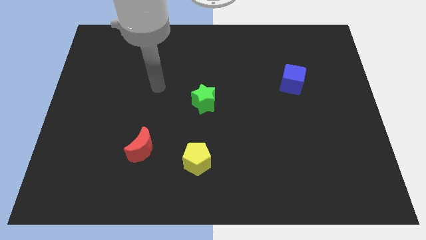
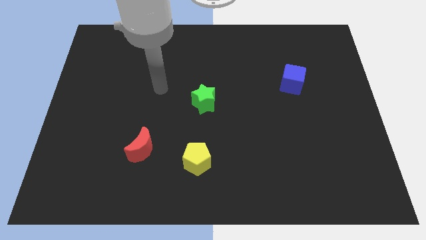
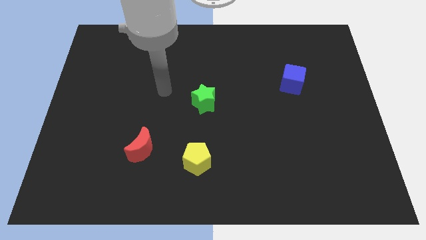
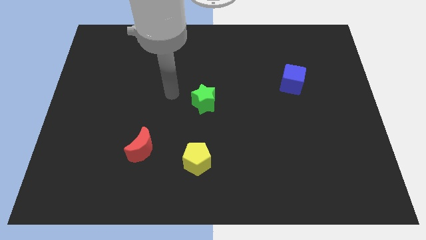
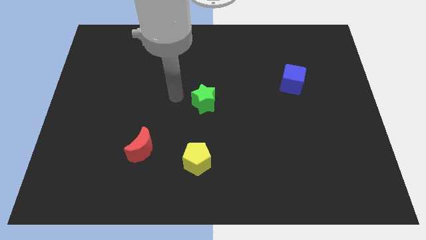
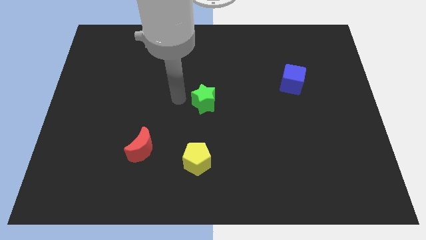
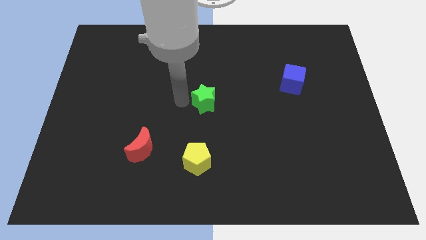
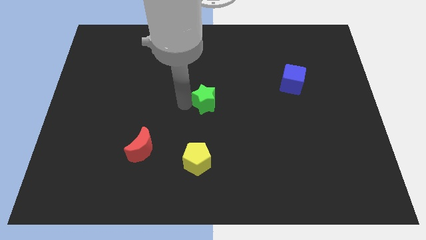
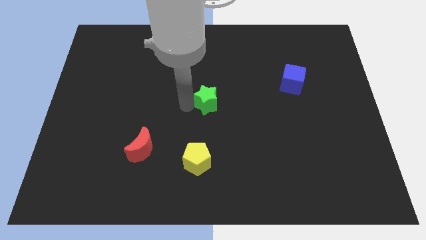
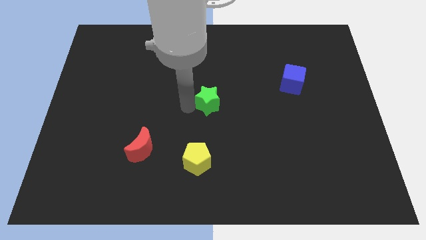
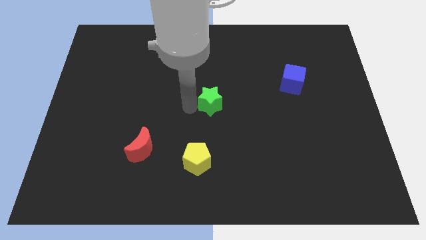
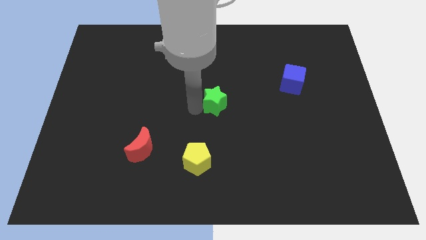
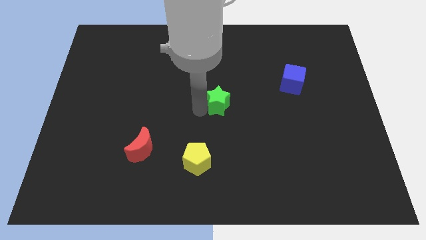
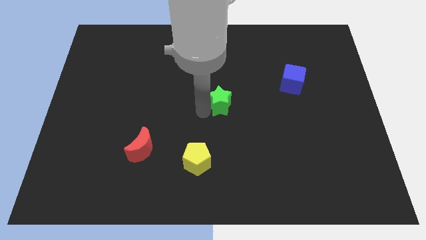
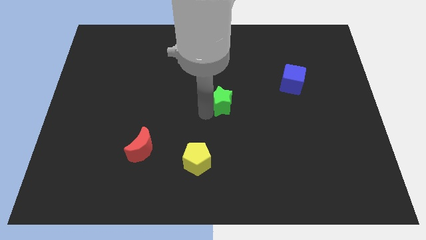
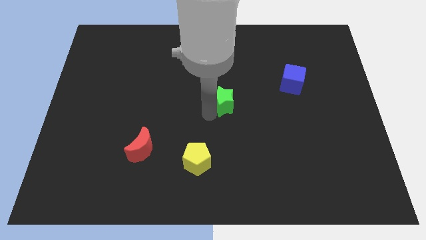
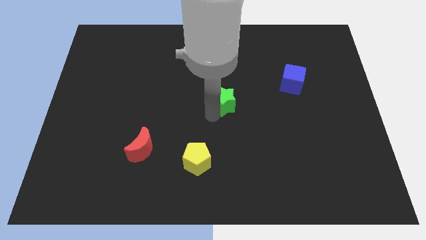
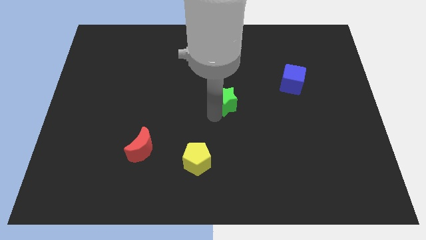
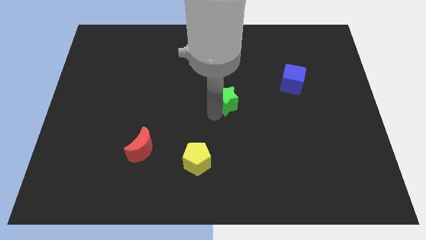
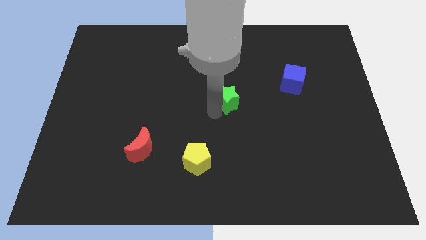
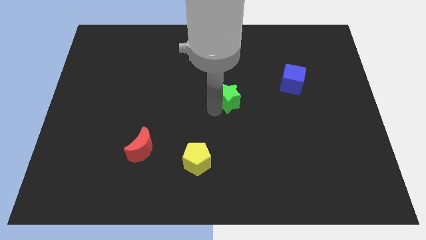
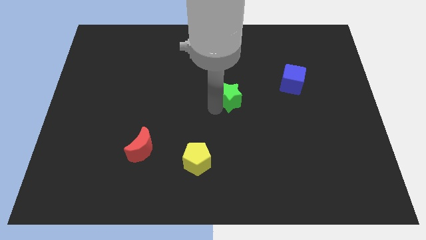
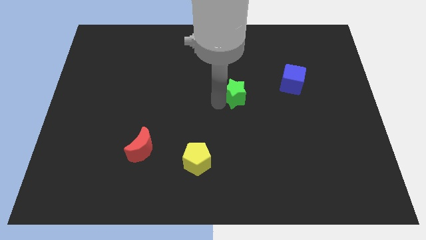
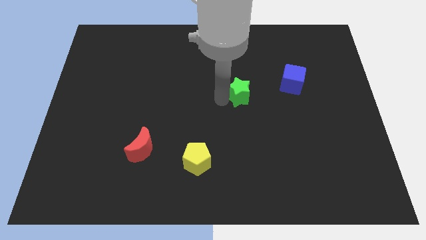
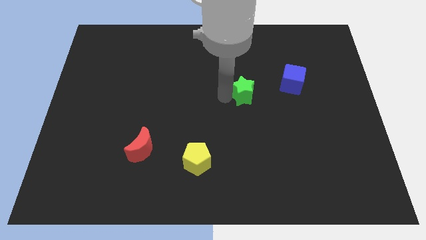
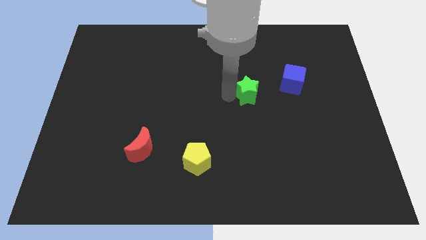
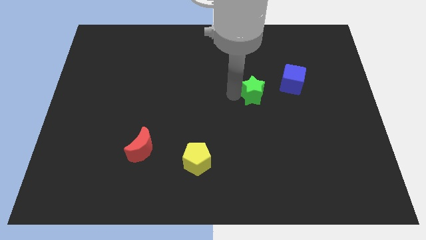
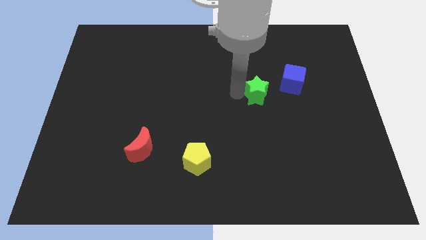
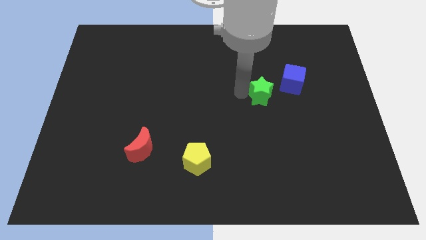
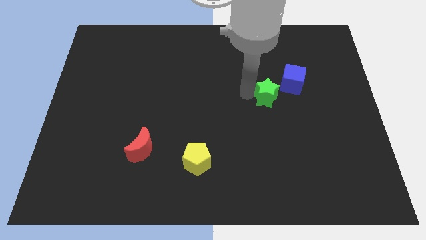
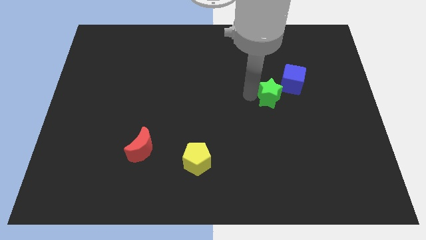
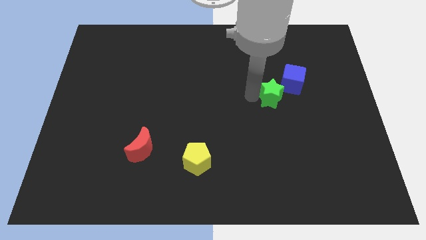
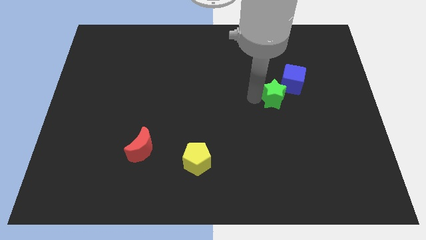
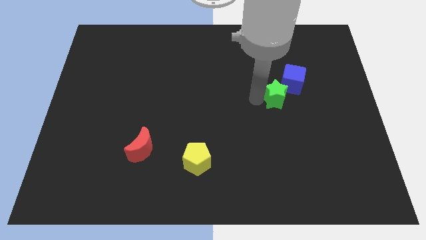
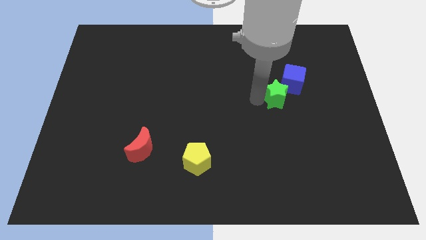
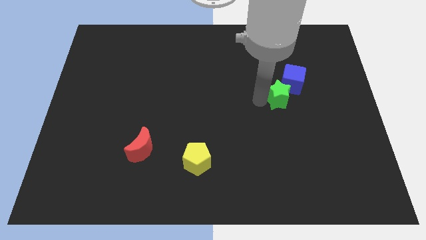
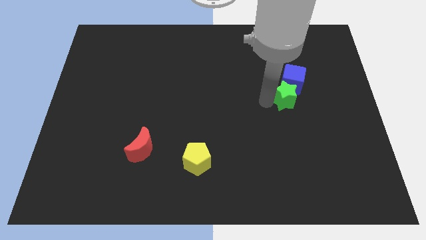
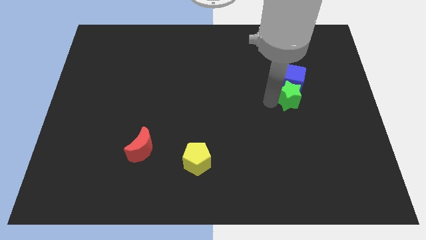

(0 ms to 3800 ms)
push the green star close to the cube

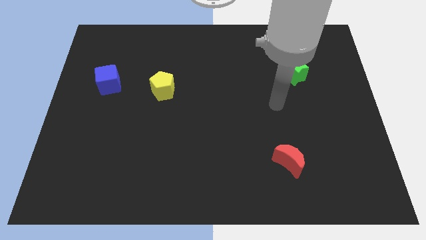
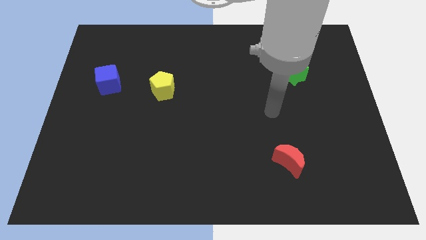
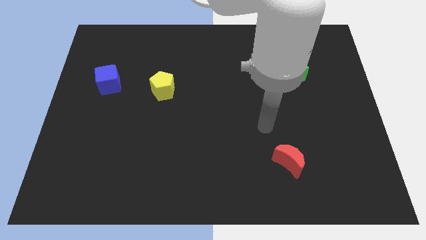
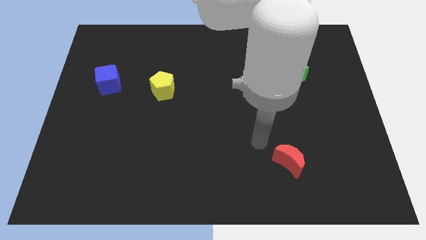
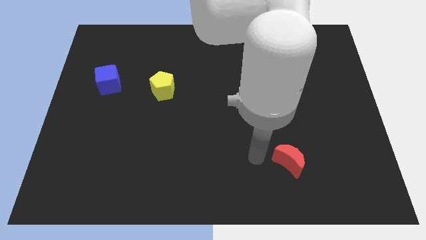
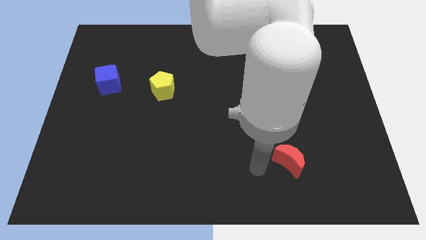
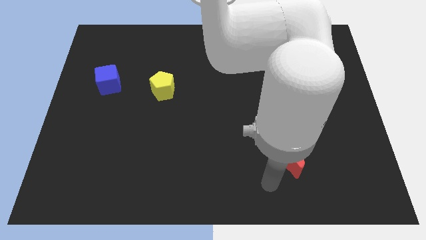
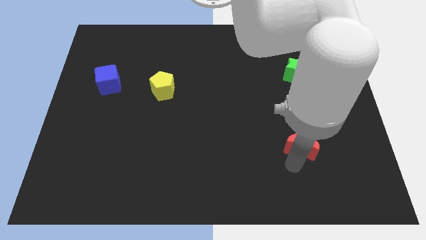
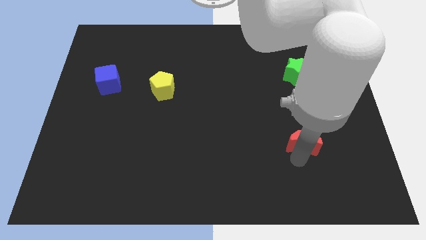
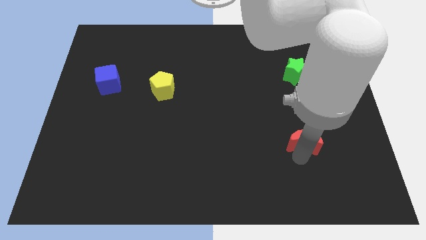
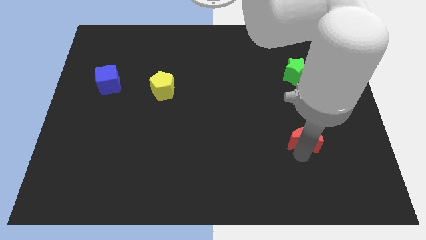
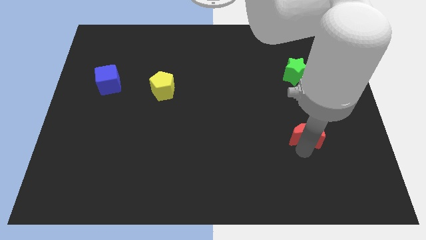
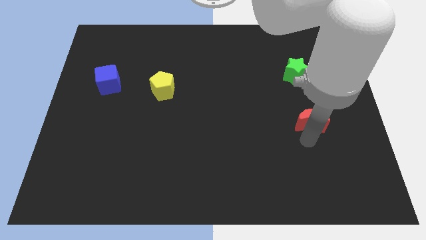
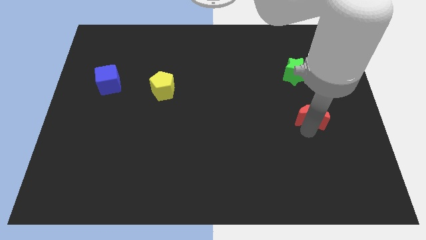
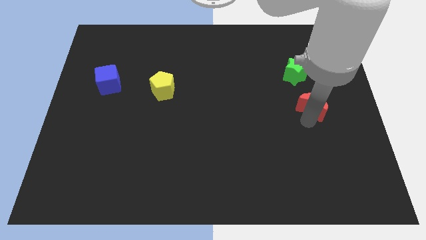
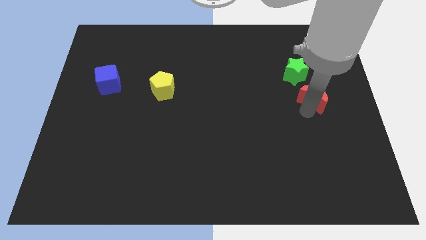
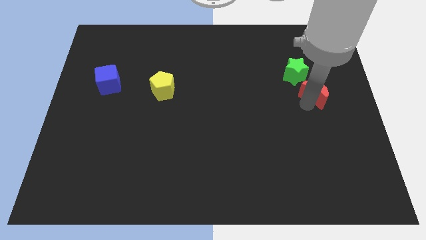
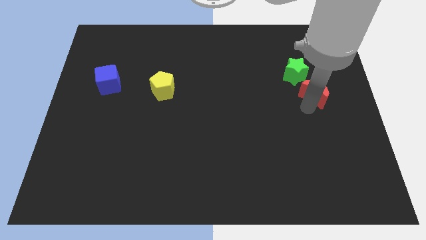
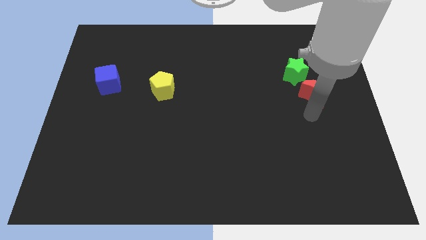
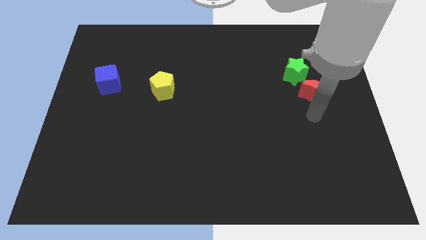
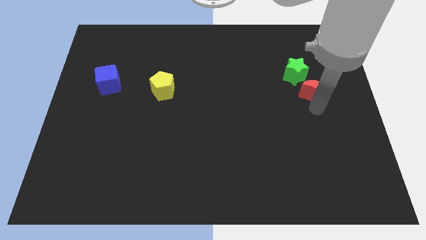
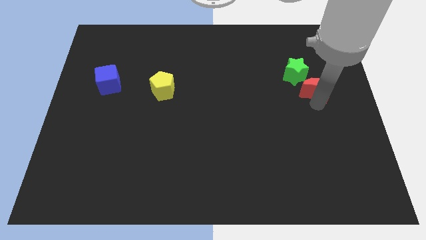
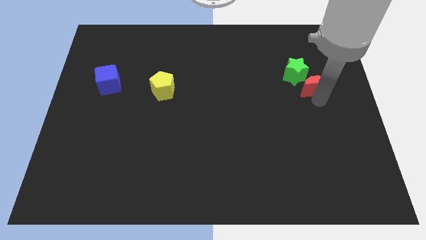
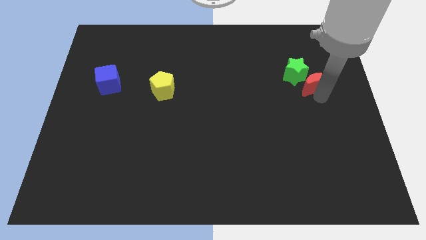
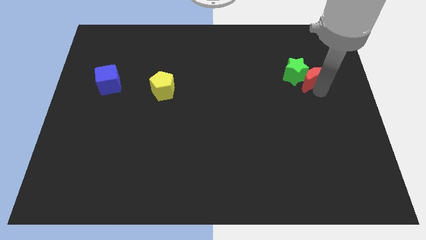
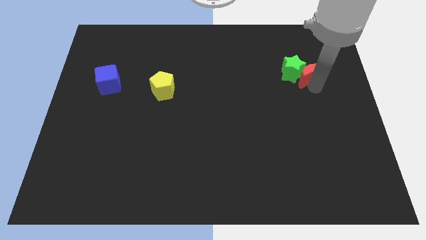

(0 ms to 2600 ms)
put the red block close to the green star

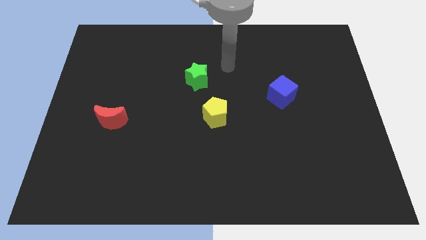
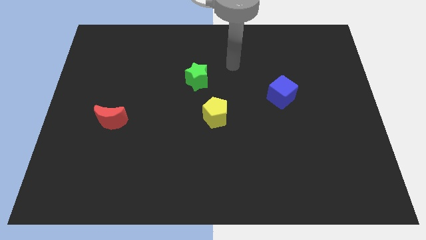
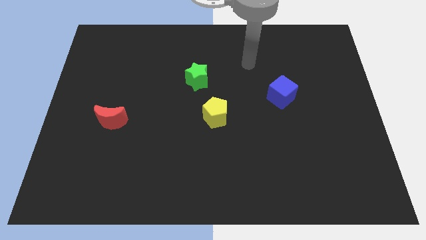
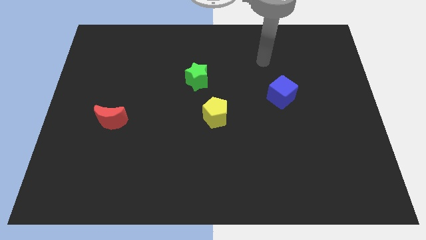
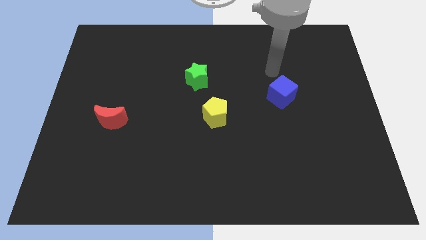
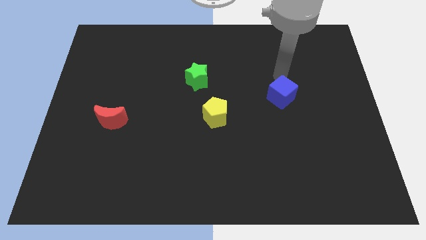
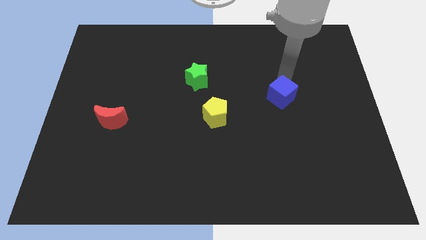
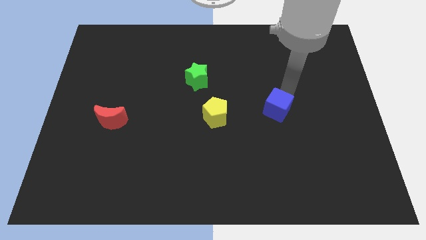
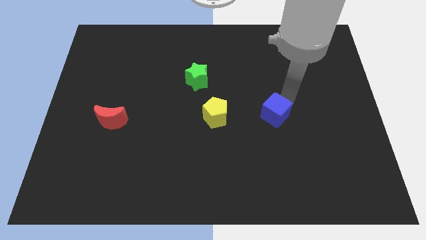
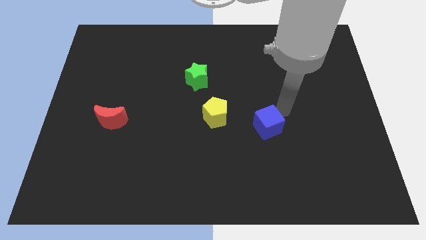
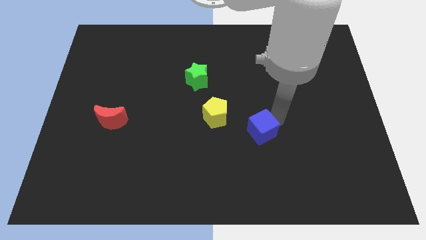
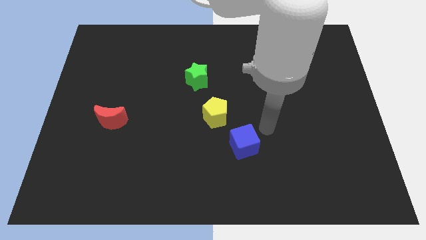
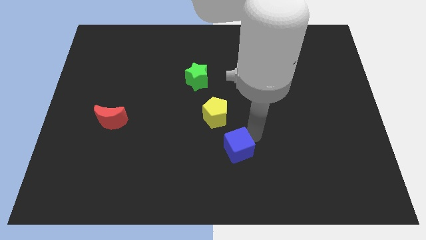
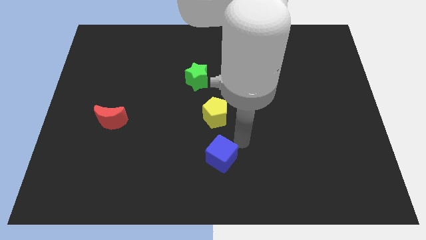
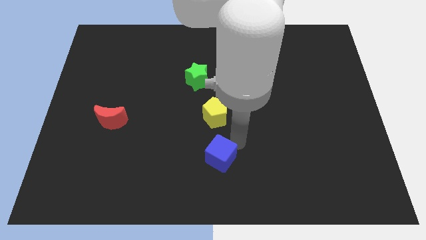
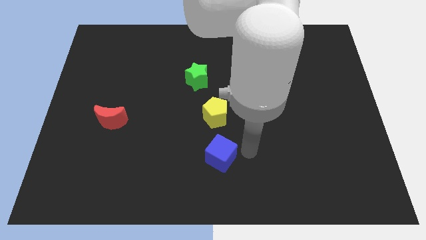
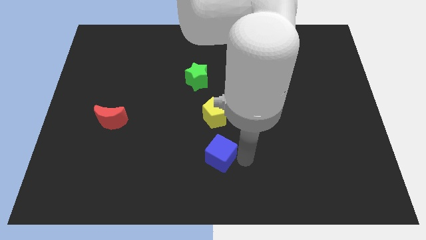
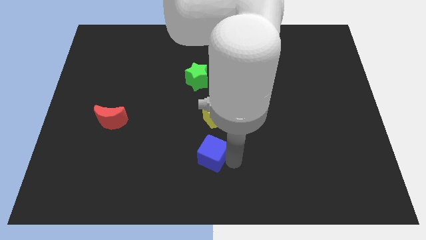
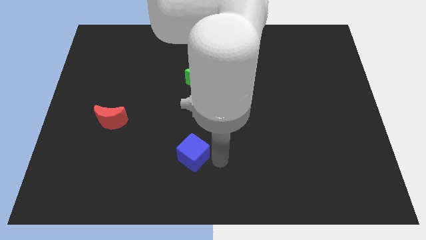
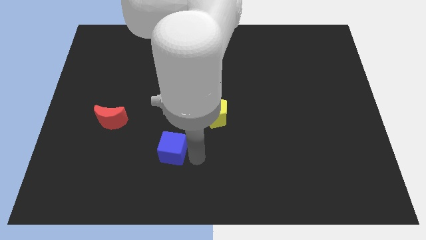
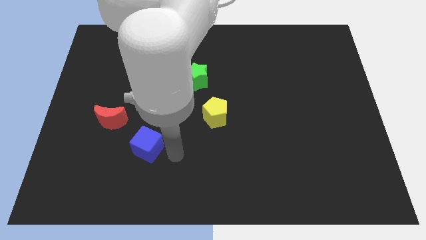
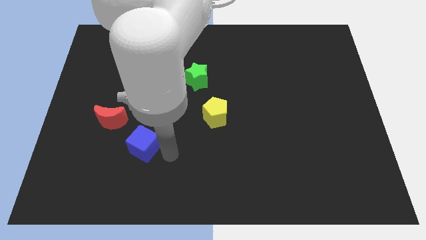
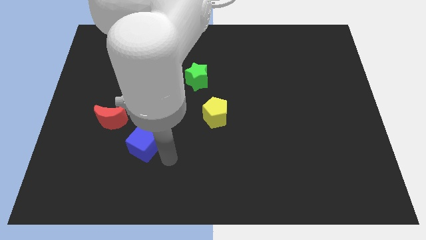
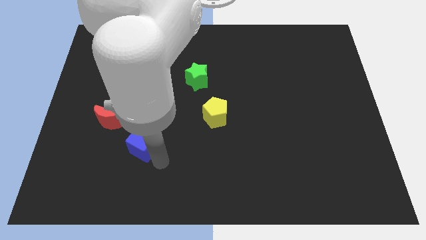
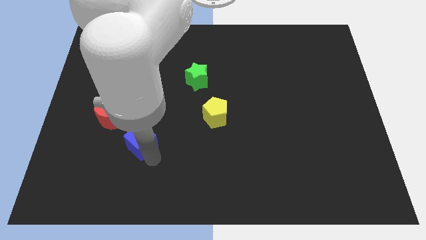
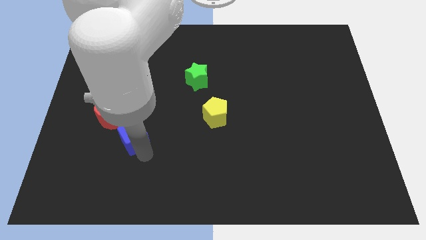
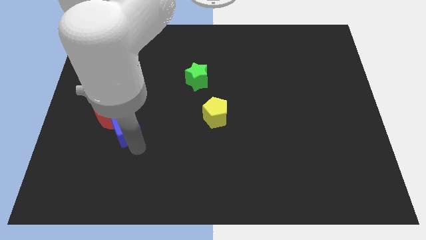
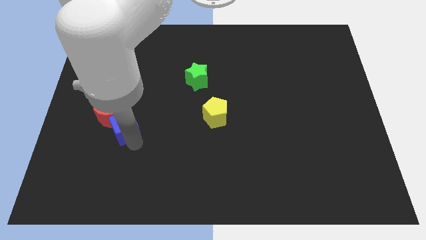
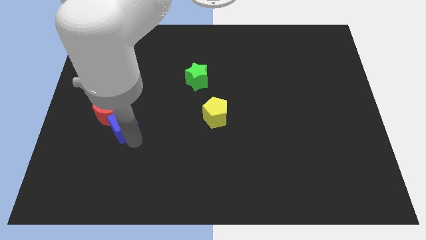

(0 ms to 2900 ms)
slide the cube to the red moon
